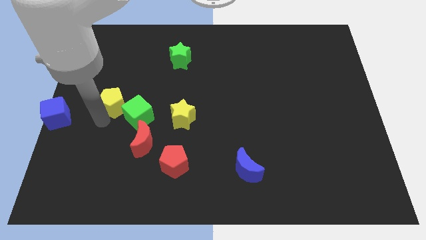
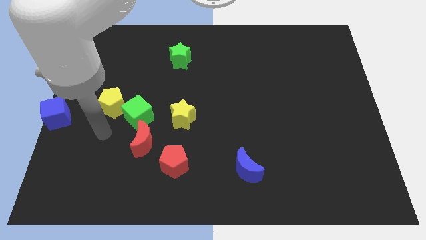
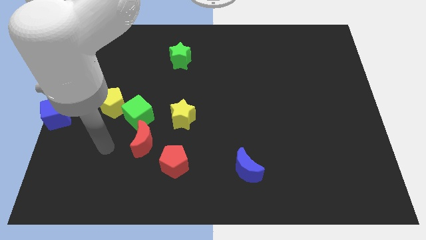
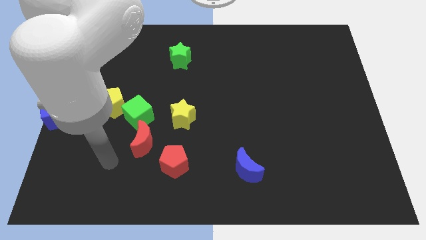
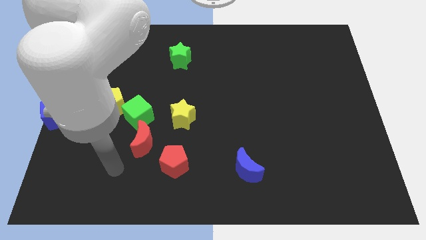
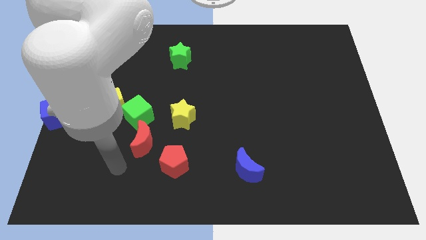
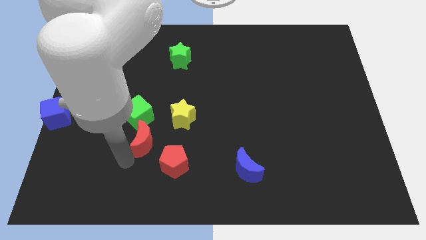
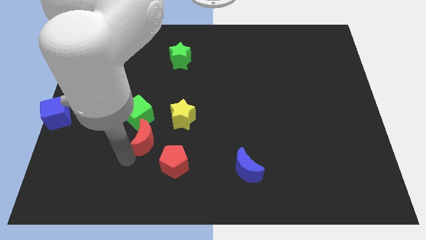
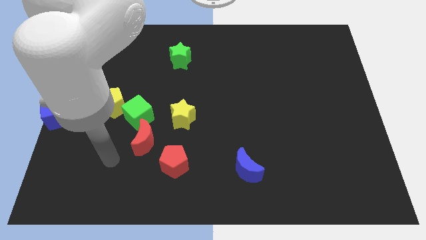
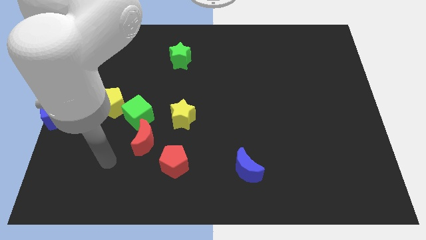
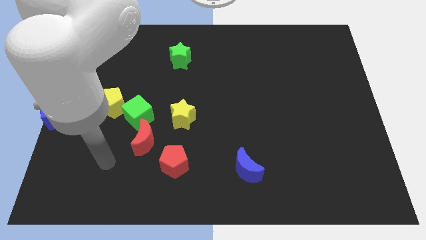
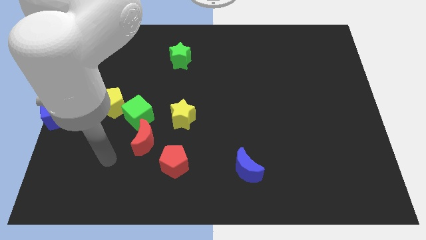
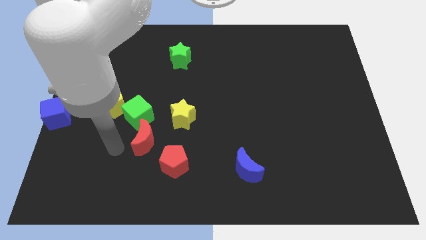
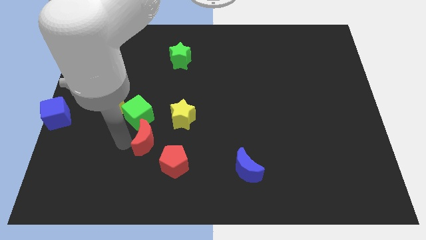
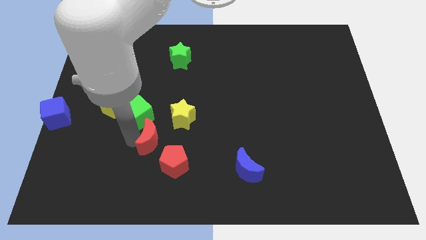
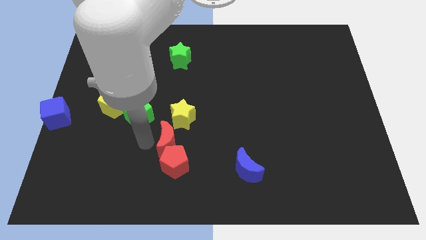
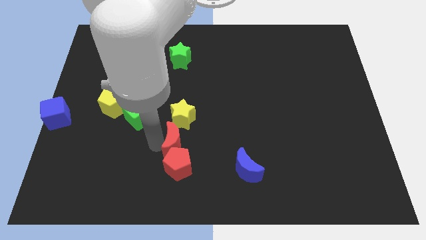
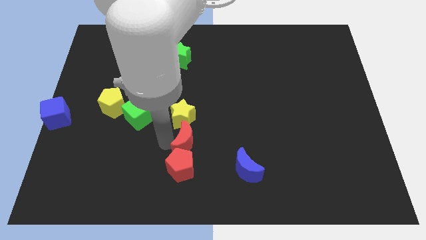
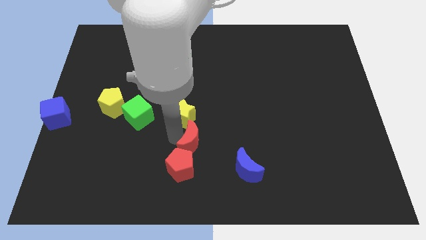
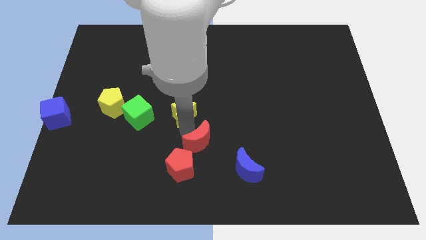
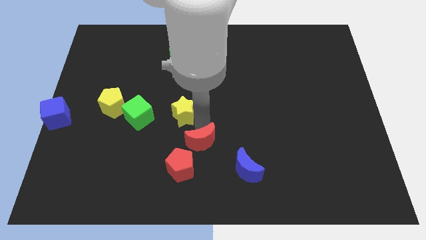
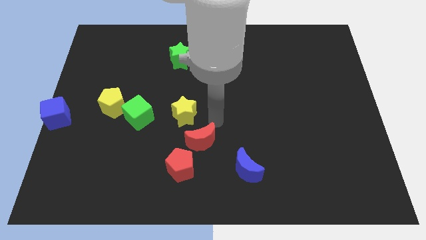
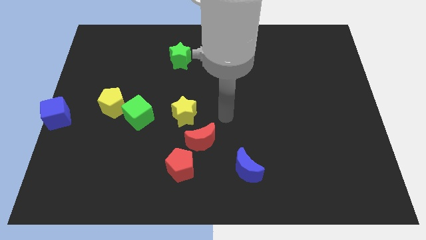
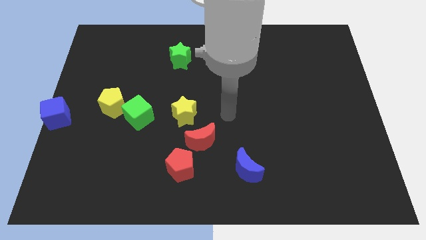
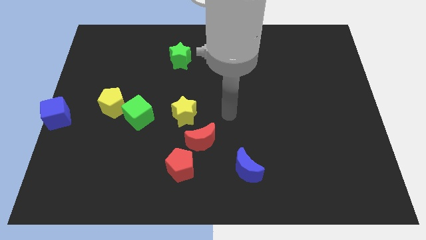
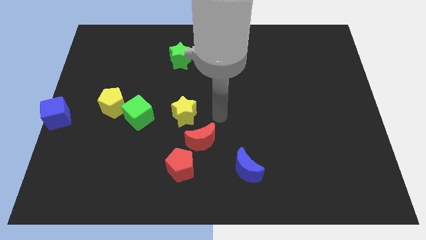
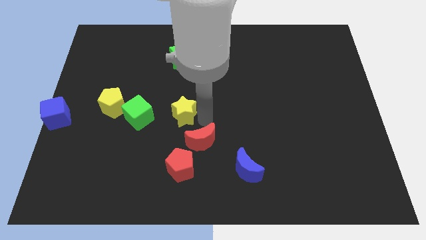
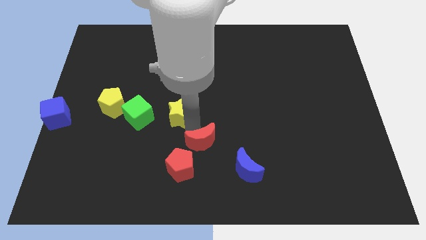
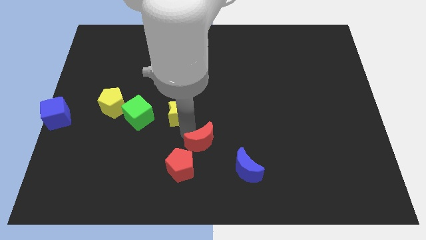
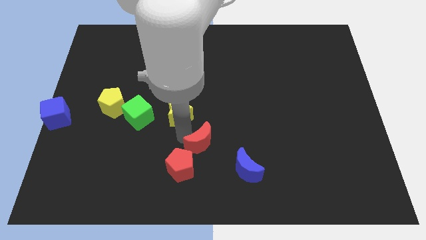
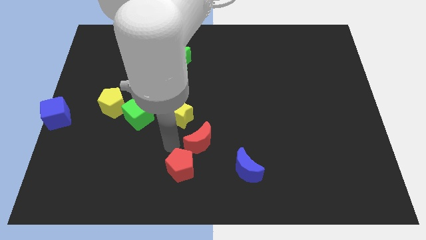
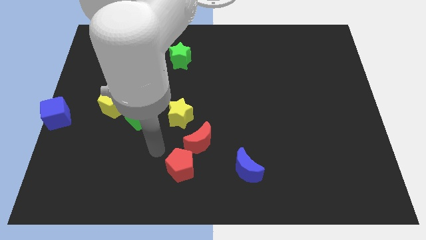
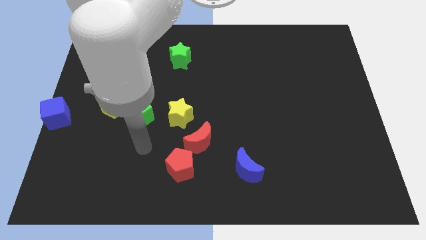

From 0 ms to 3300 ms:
place the red crescent close to the red pentagon

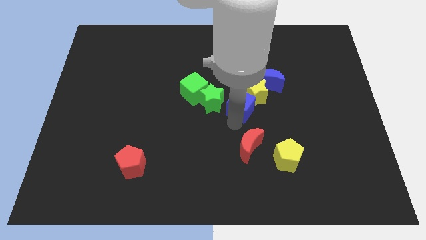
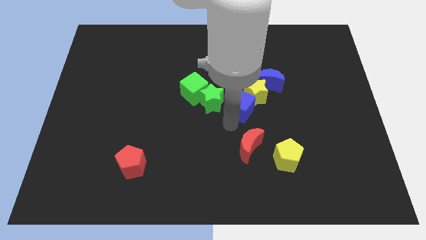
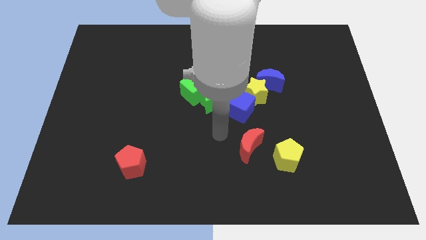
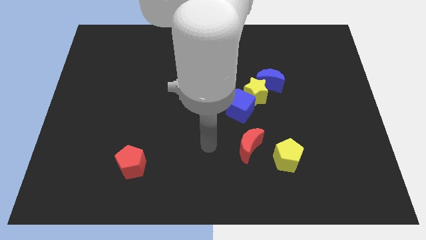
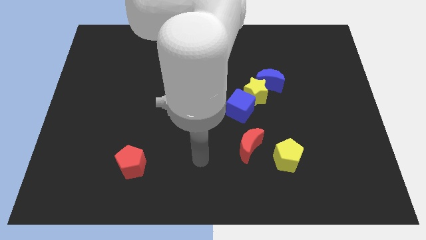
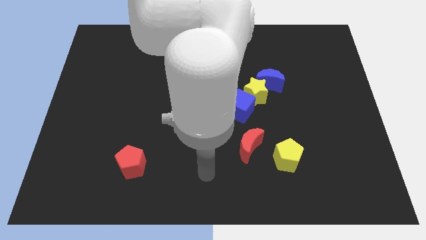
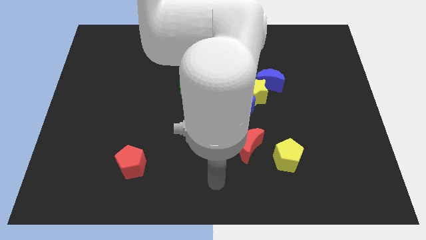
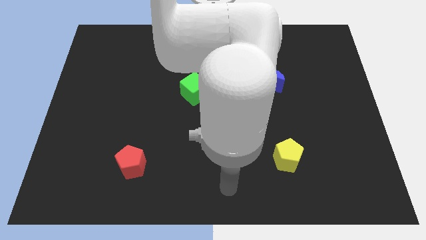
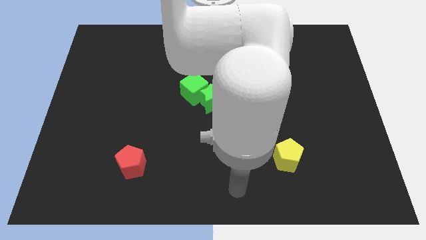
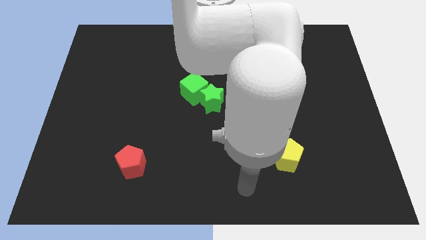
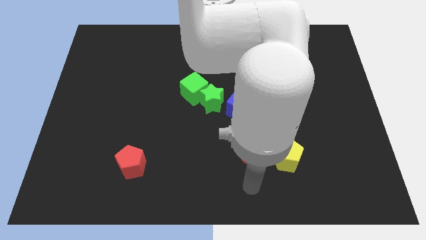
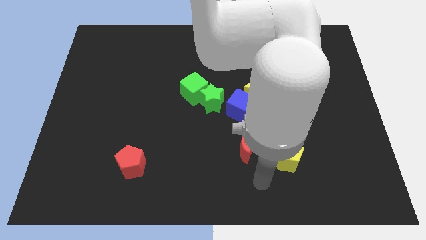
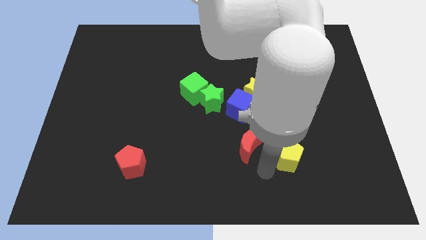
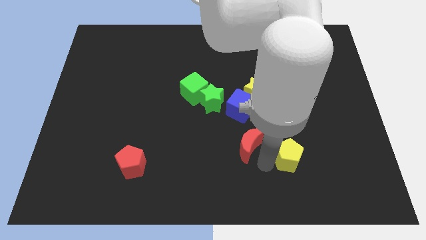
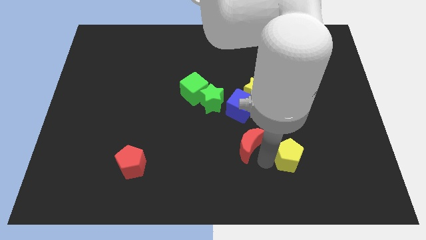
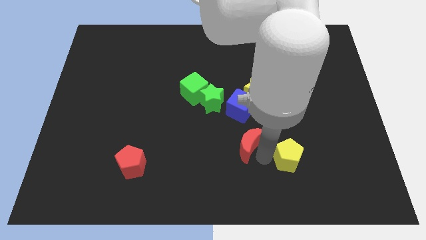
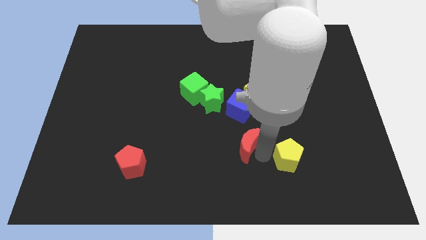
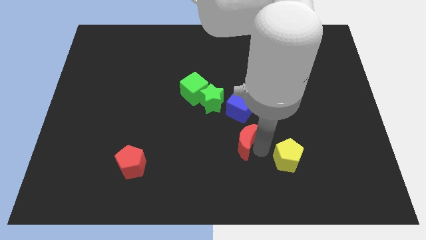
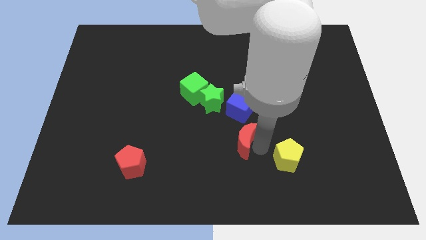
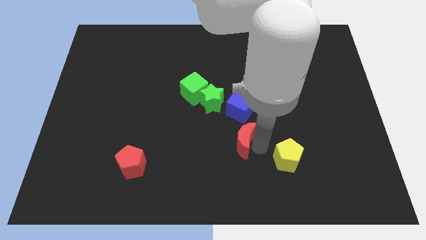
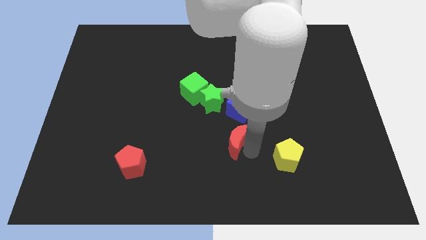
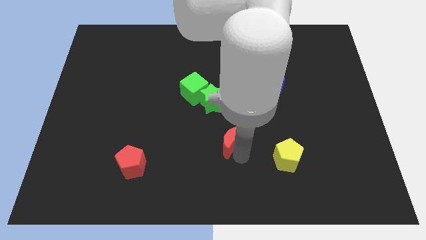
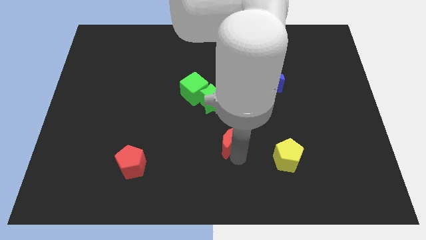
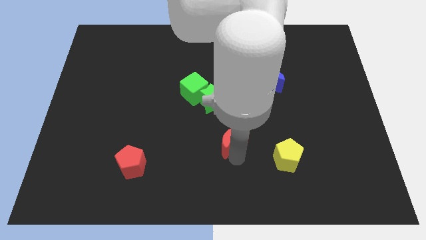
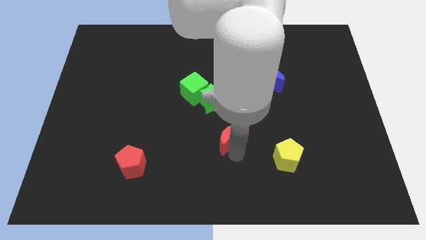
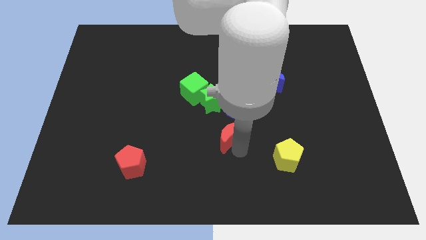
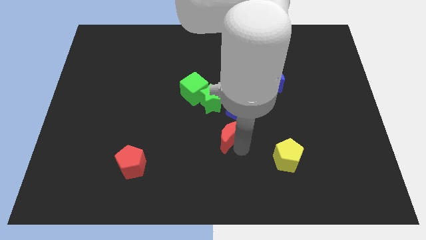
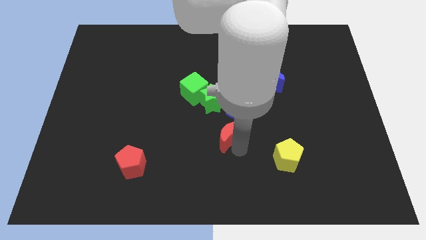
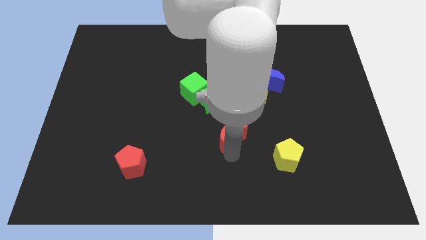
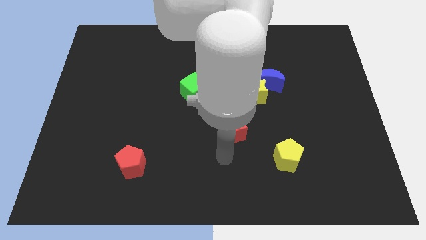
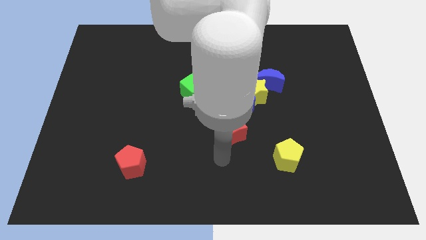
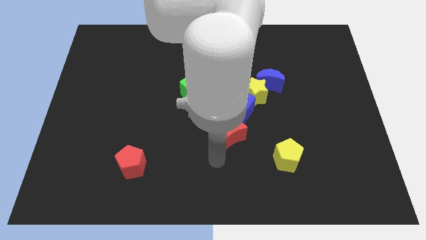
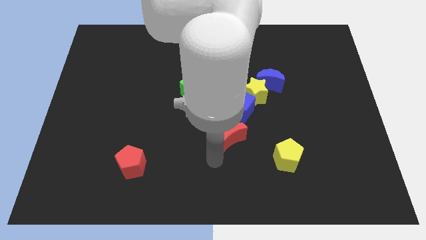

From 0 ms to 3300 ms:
move the red moon away from the yellow pentagon

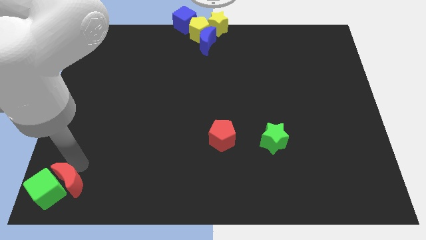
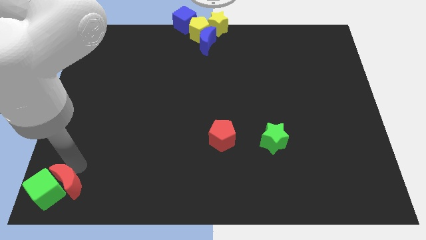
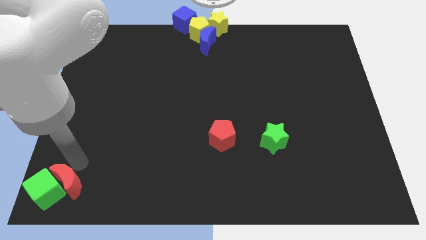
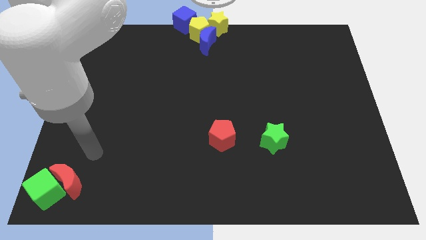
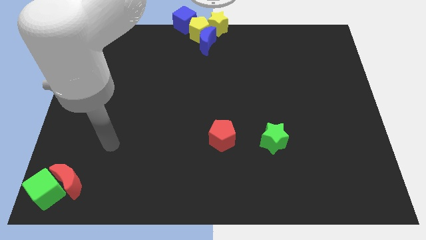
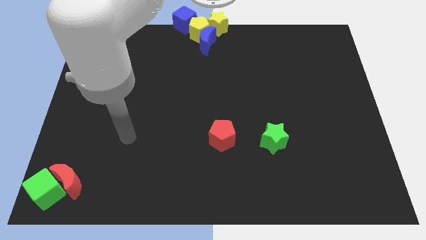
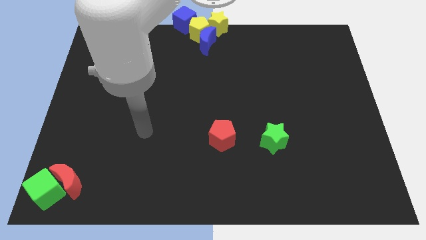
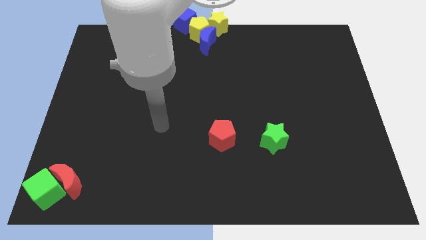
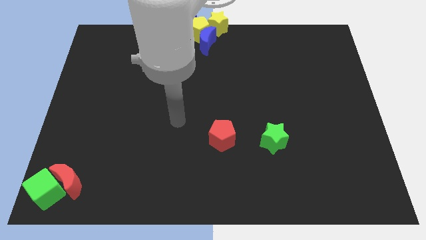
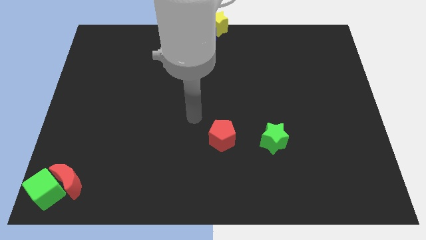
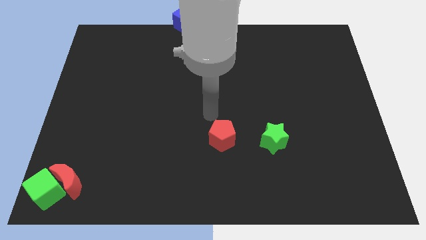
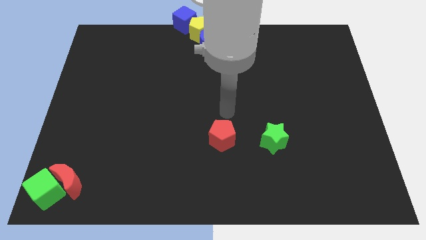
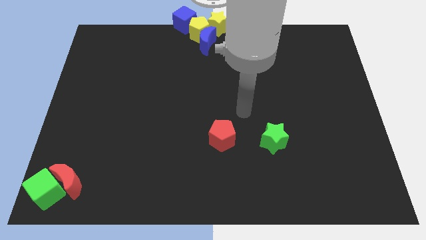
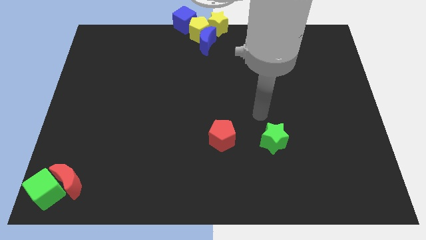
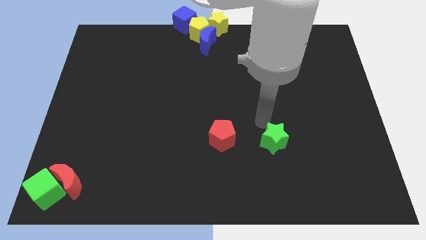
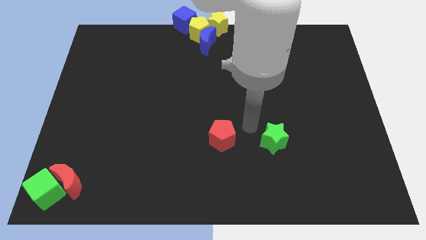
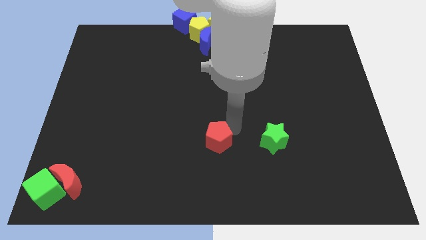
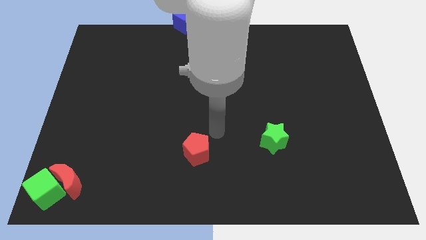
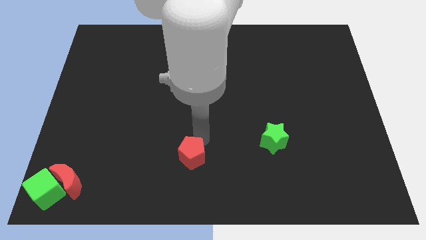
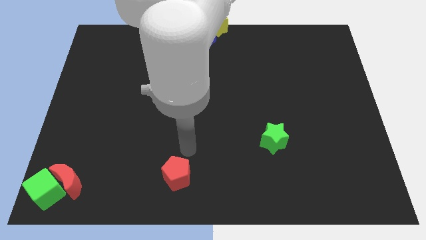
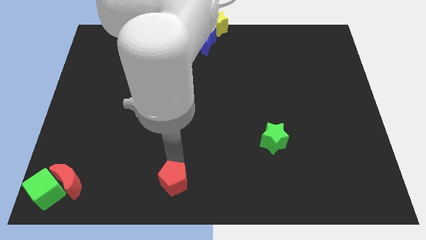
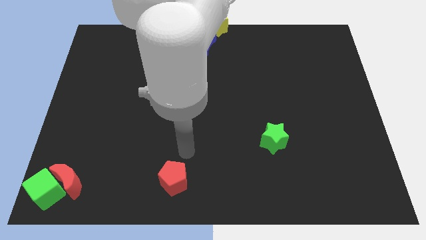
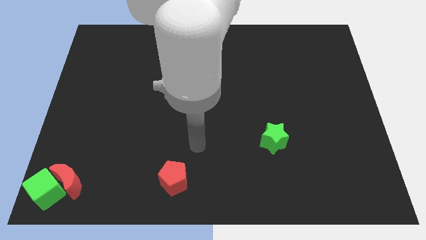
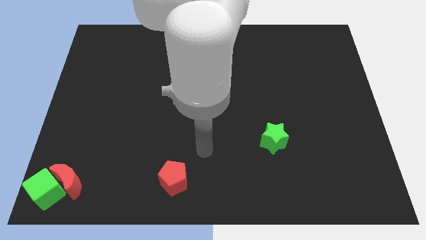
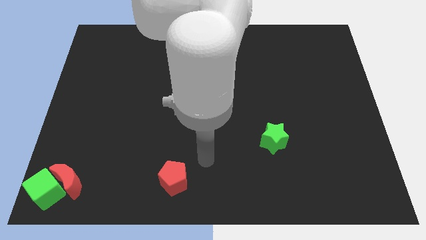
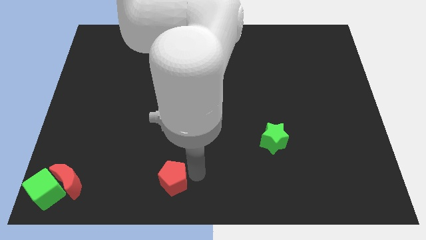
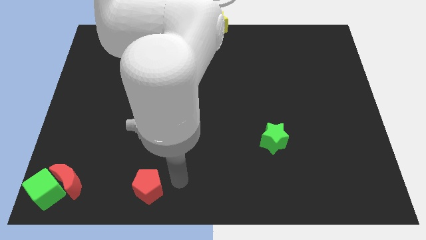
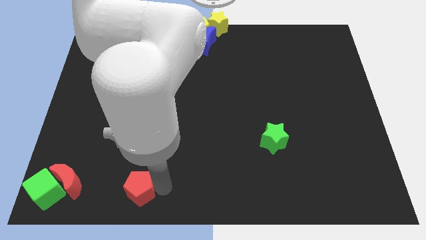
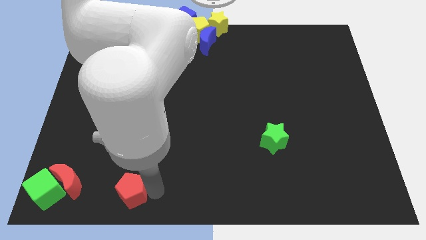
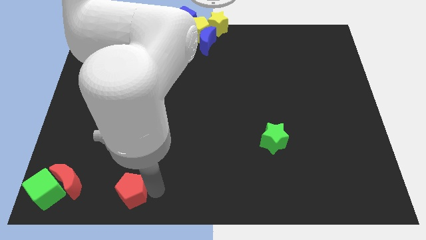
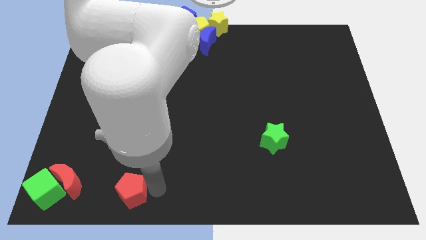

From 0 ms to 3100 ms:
push the red pentago towards the bottom left of the board
